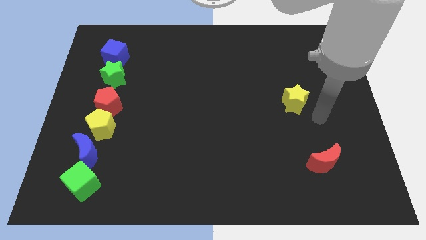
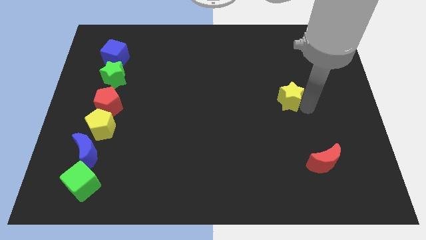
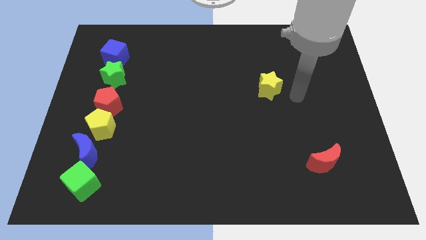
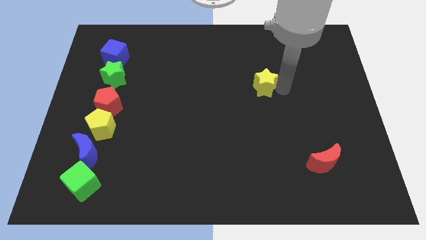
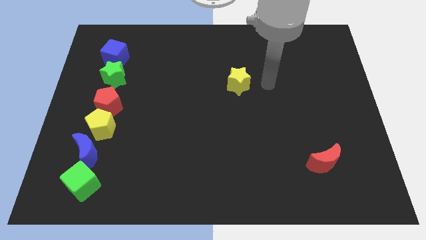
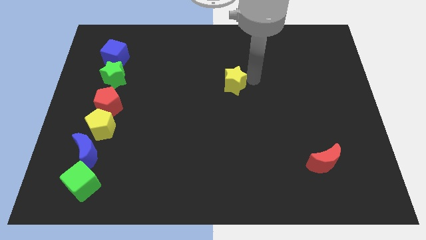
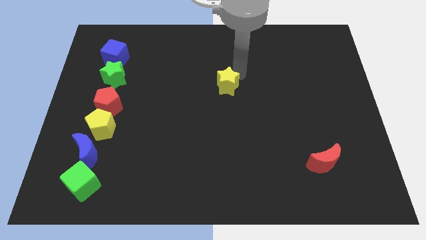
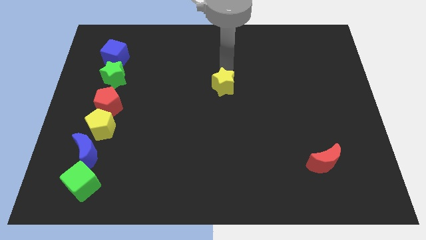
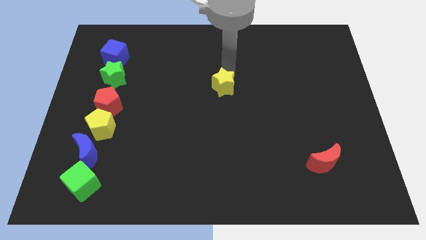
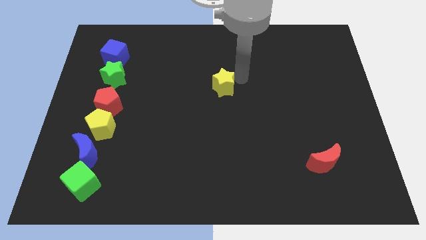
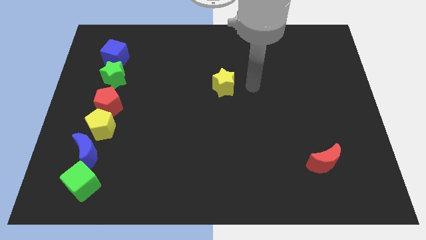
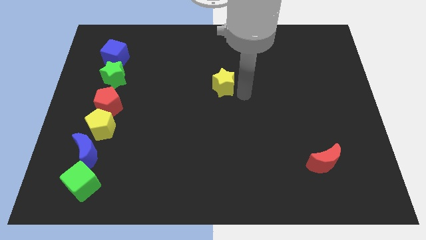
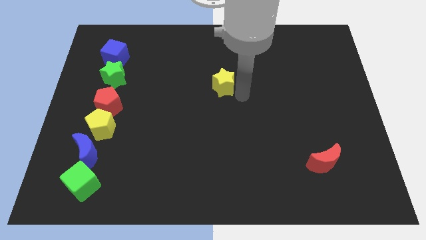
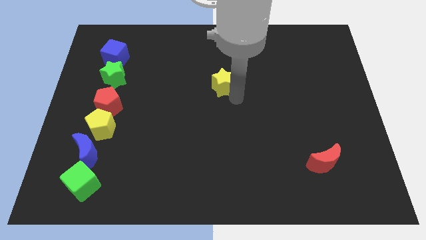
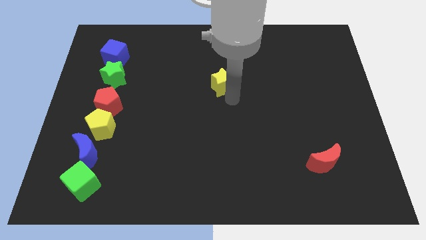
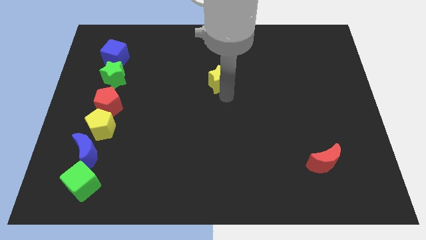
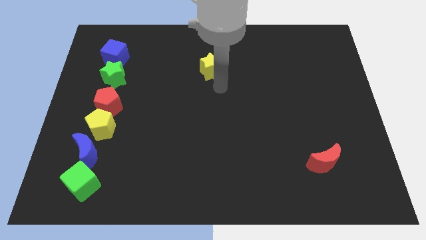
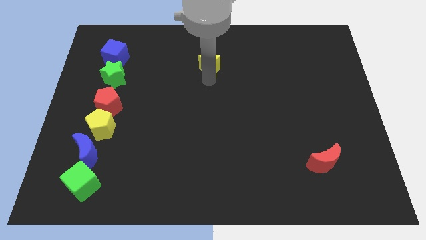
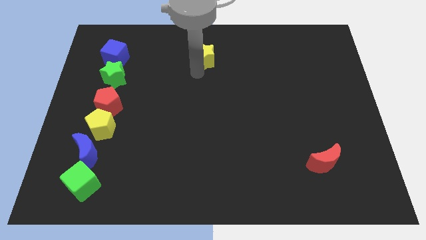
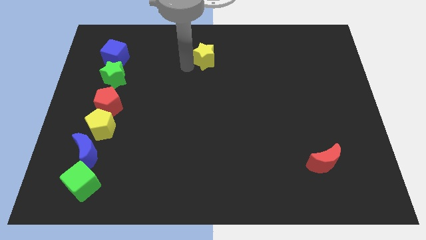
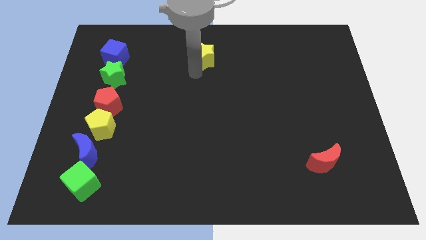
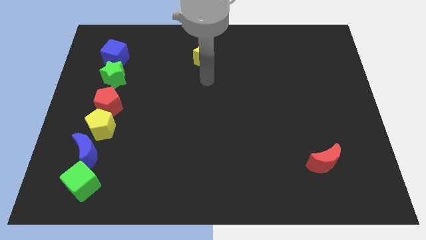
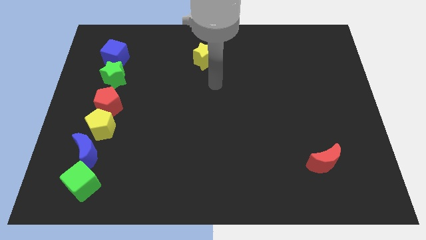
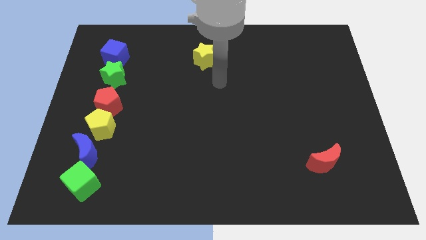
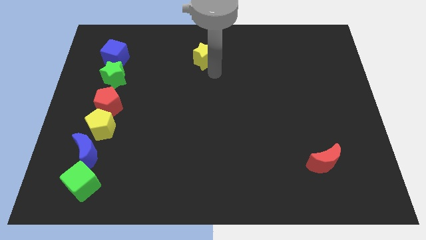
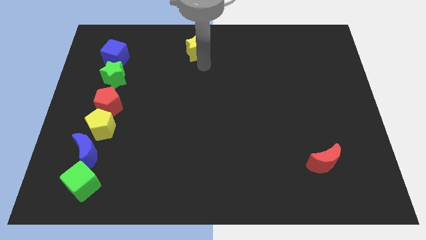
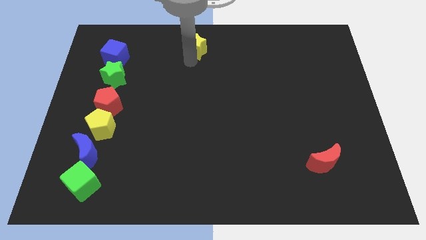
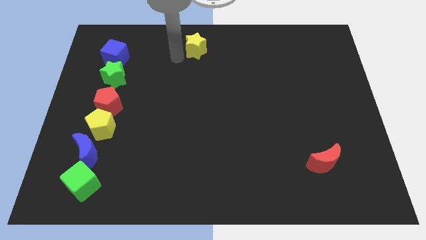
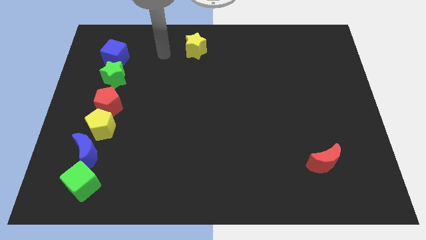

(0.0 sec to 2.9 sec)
move the yellow star to the top center

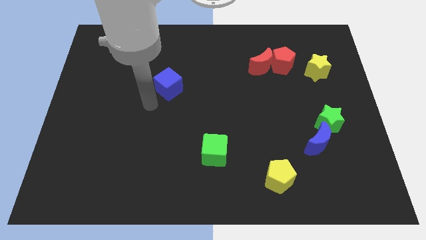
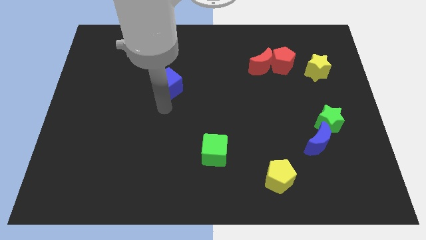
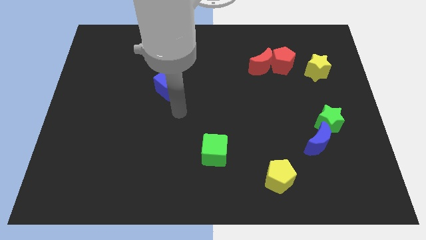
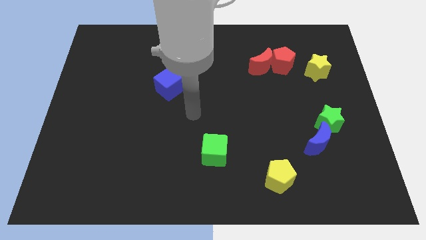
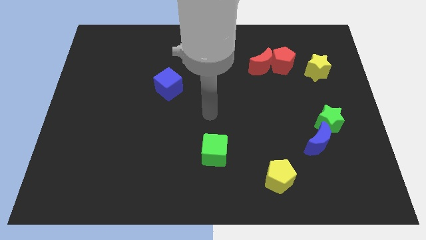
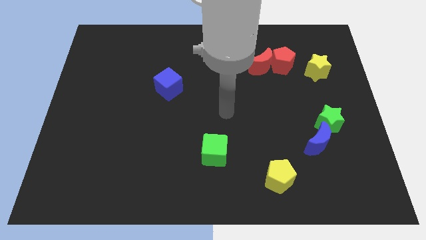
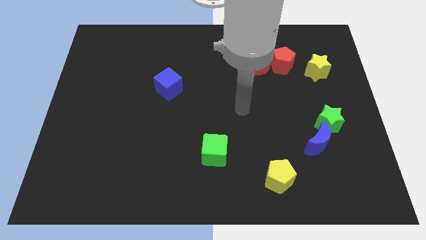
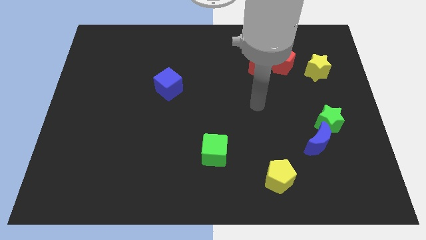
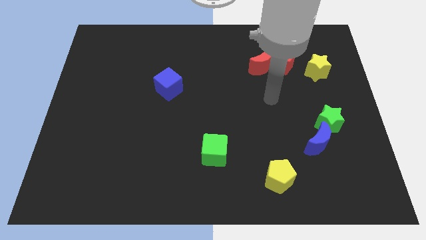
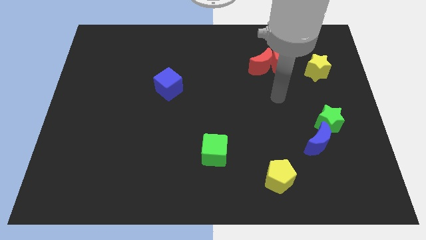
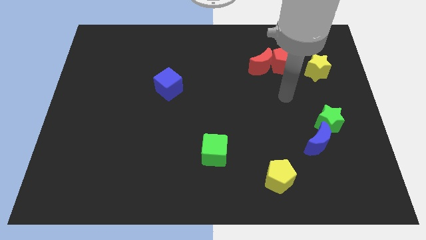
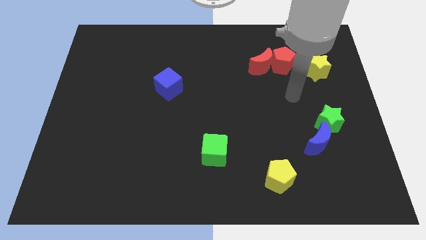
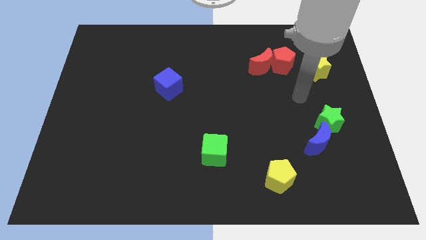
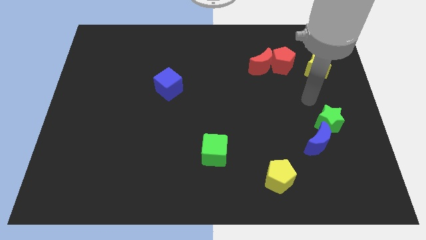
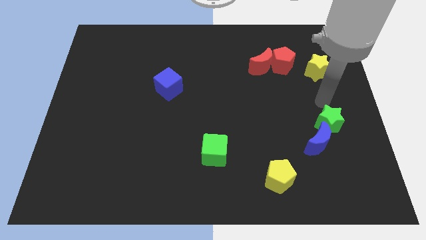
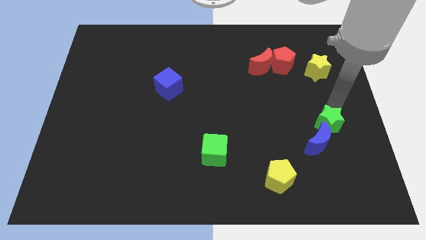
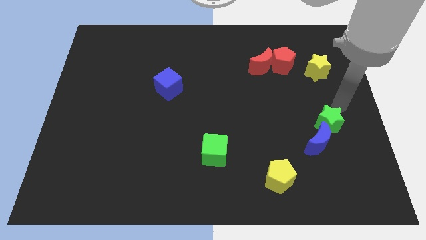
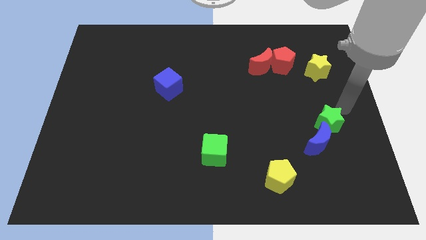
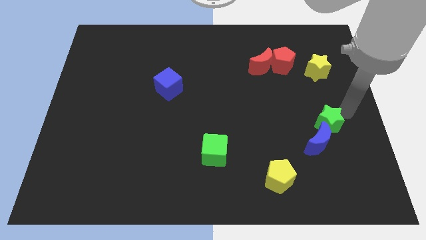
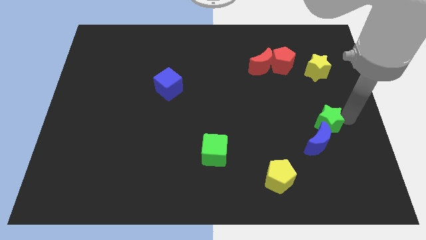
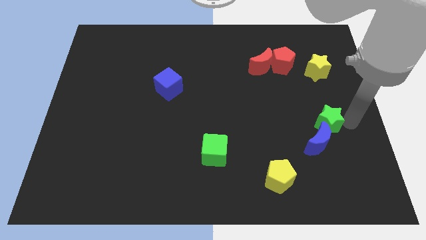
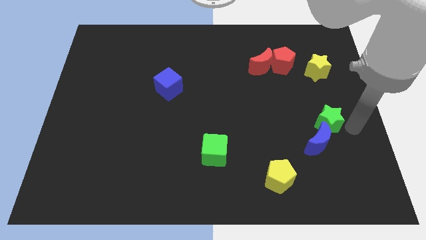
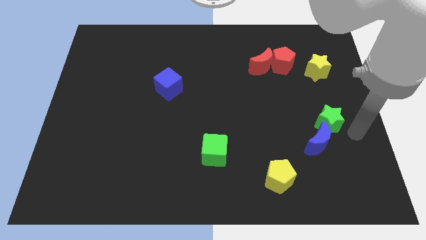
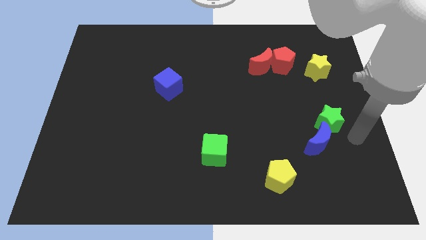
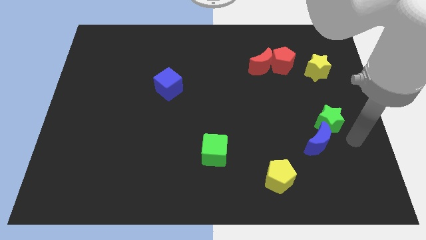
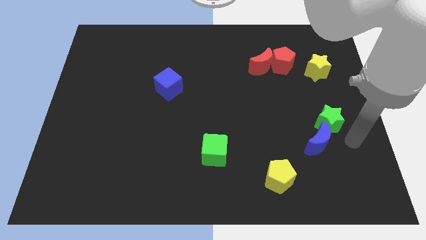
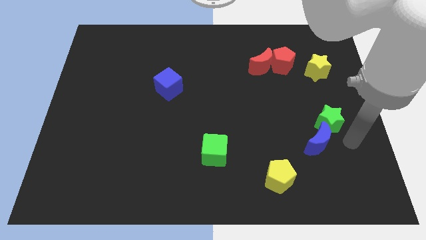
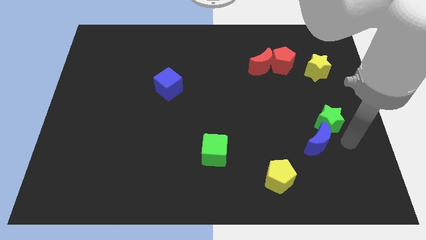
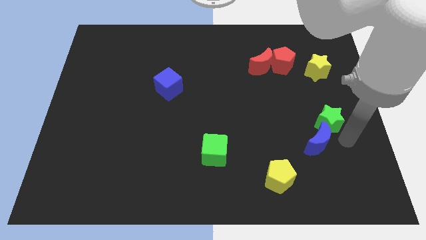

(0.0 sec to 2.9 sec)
move the arm near green star

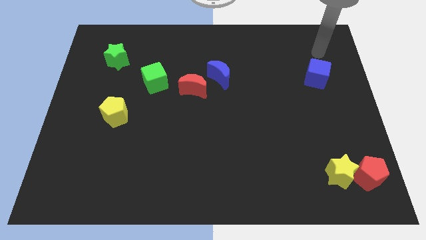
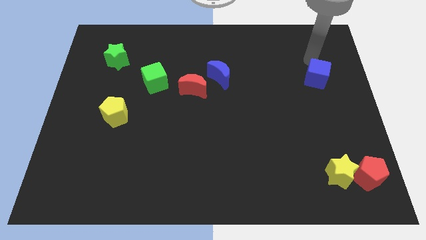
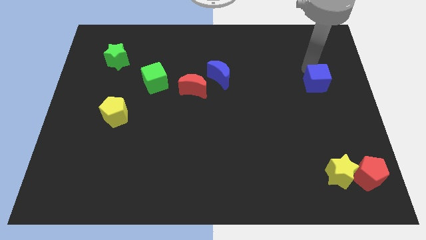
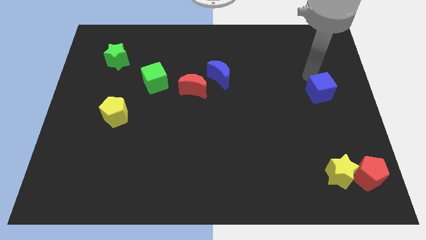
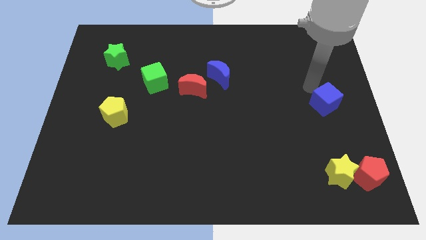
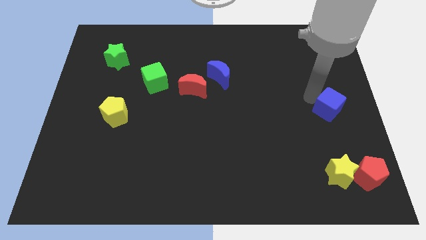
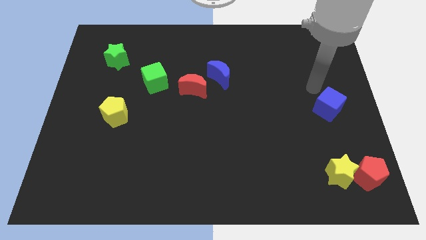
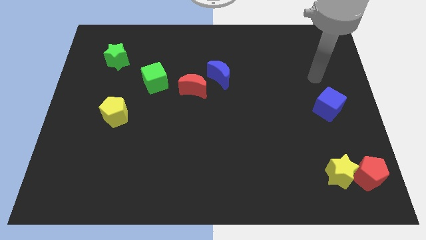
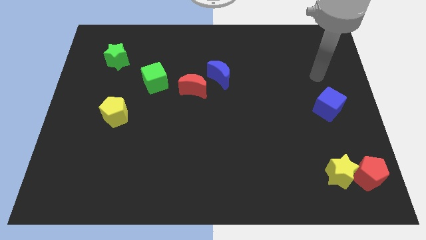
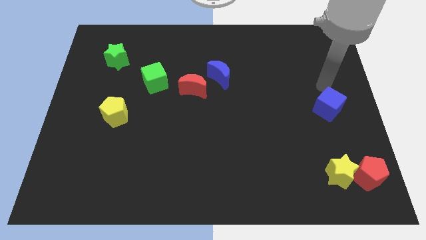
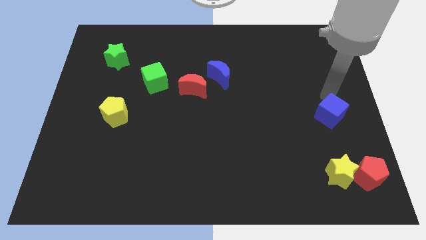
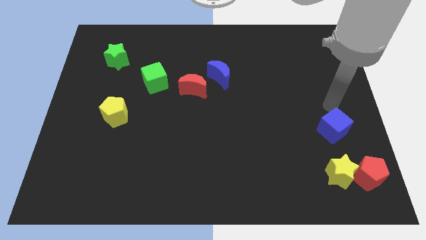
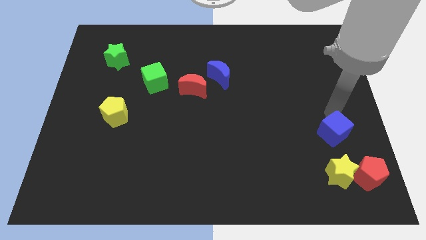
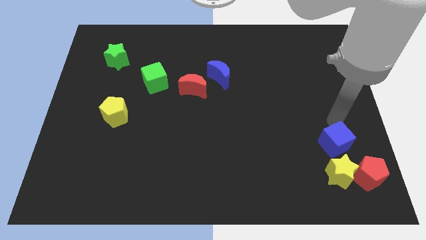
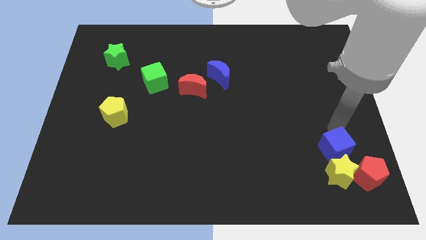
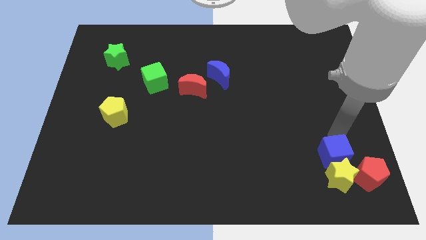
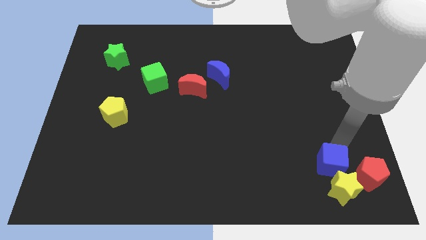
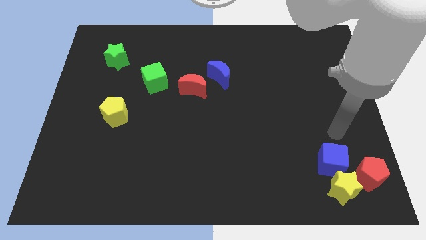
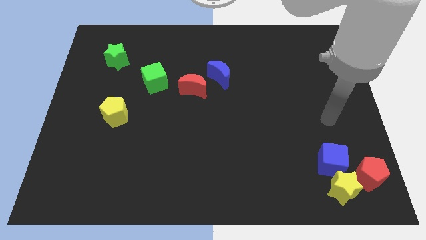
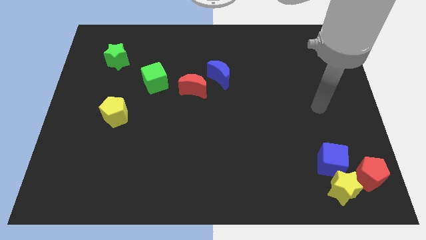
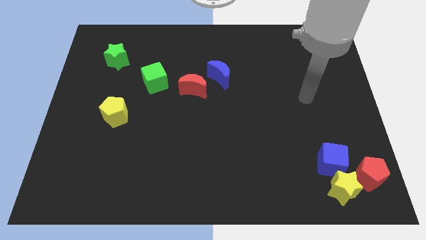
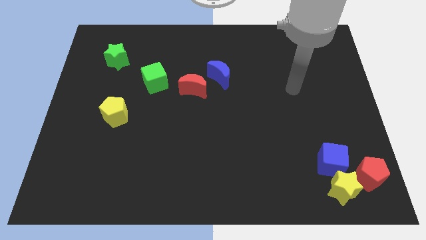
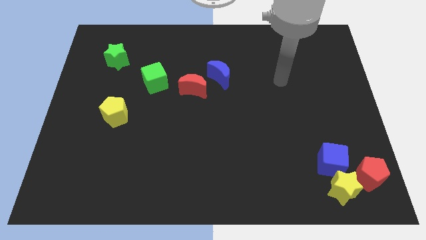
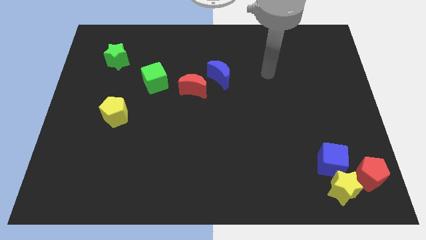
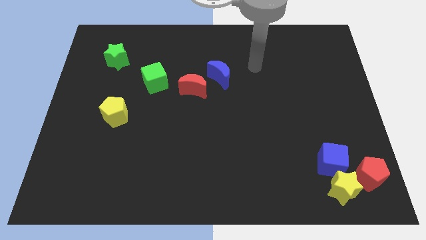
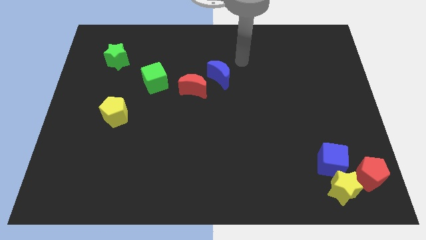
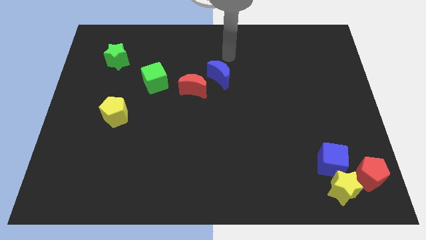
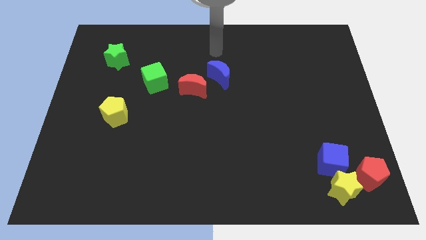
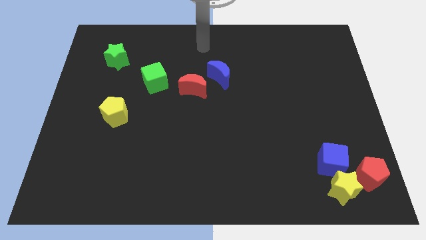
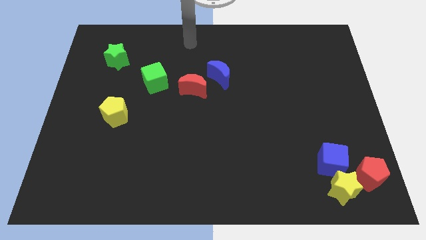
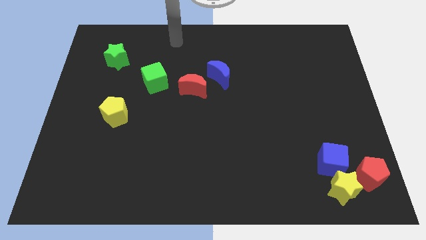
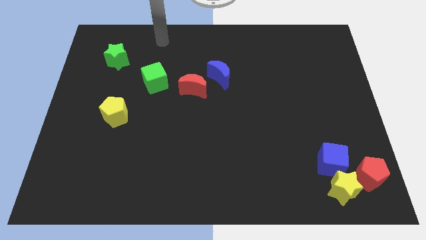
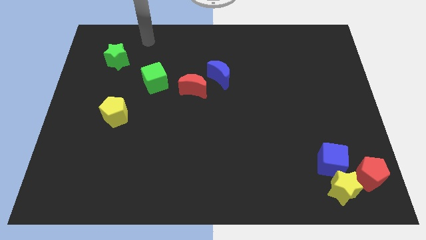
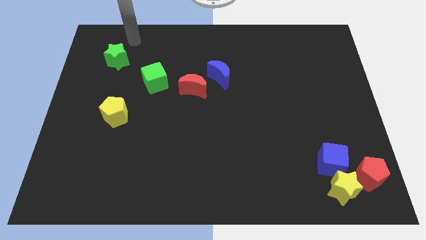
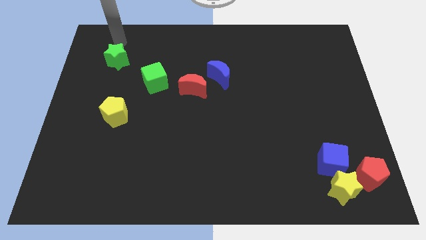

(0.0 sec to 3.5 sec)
push the yellow star with the blue cube
